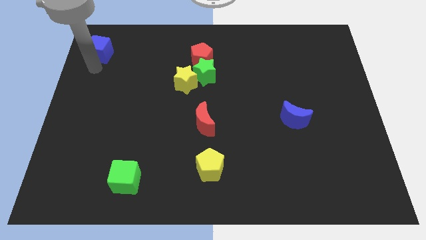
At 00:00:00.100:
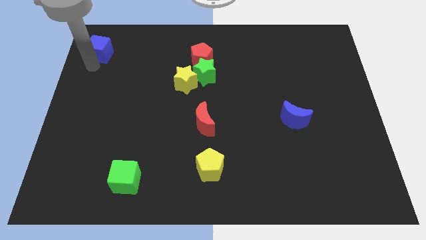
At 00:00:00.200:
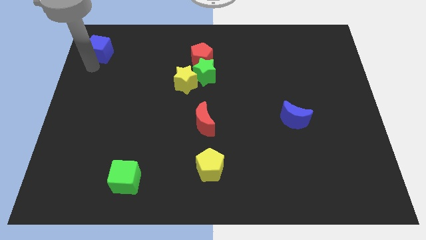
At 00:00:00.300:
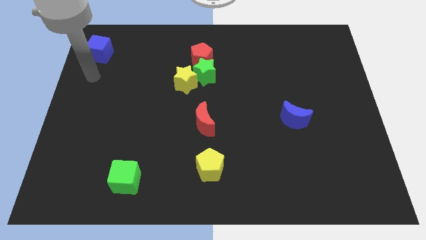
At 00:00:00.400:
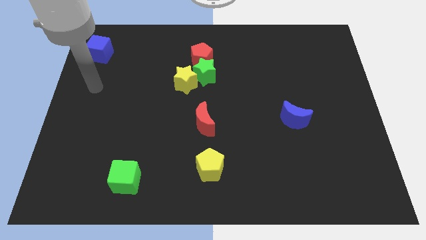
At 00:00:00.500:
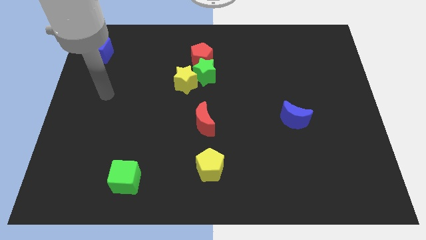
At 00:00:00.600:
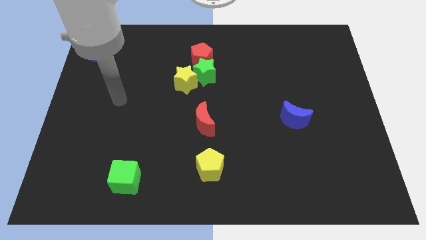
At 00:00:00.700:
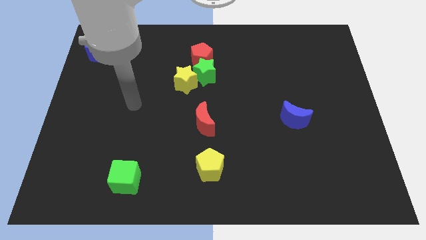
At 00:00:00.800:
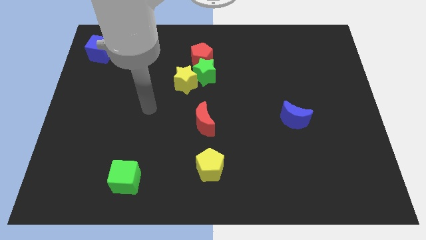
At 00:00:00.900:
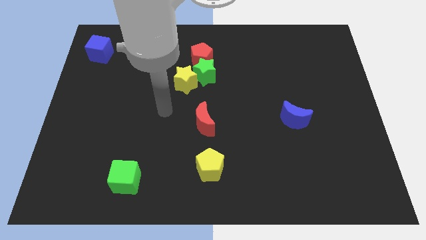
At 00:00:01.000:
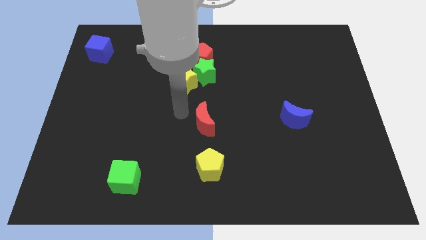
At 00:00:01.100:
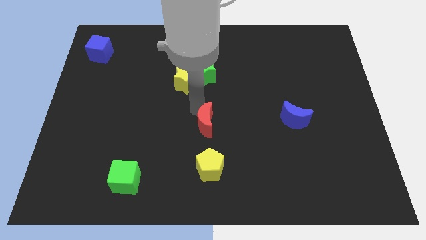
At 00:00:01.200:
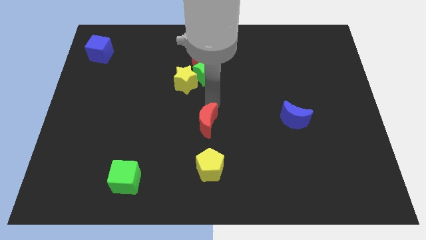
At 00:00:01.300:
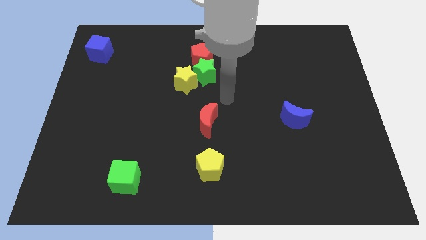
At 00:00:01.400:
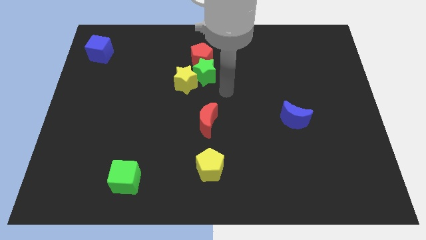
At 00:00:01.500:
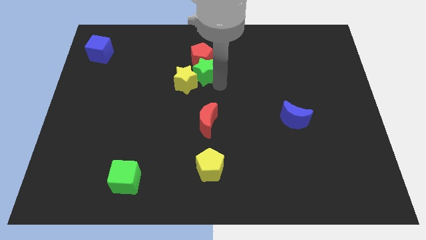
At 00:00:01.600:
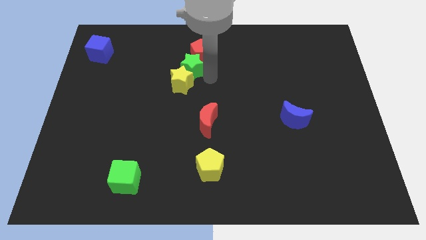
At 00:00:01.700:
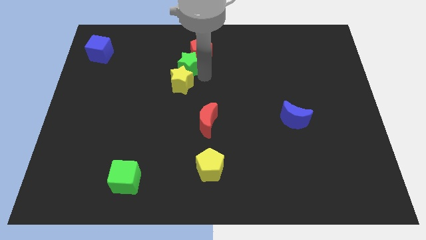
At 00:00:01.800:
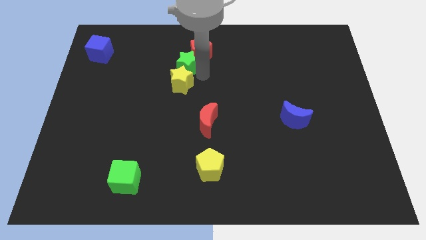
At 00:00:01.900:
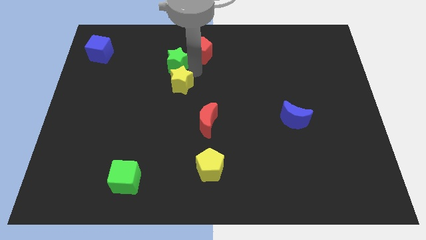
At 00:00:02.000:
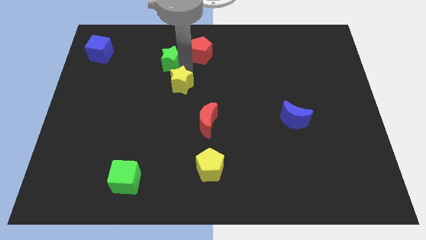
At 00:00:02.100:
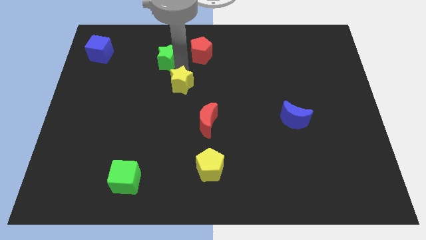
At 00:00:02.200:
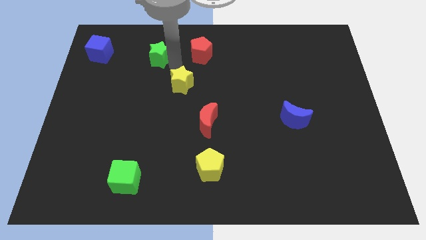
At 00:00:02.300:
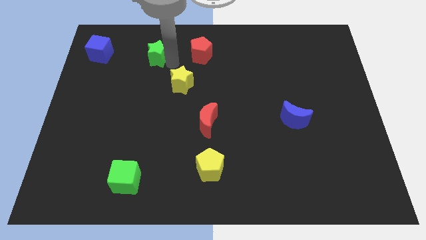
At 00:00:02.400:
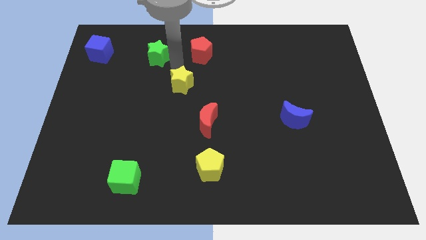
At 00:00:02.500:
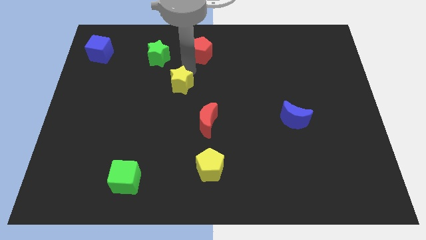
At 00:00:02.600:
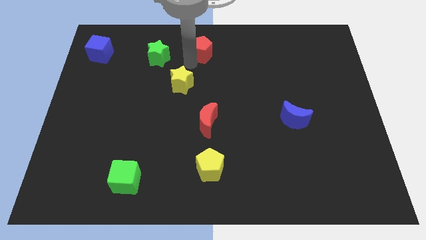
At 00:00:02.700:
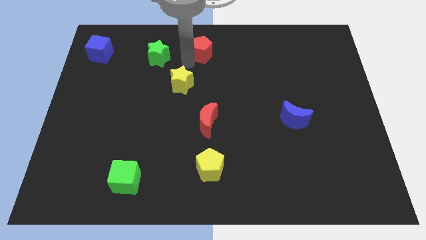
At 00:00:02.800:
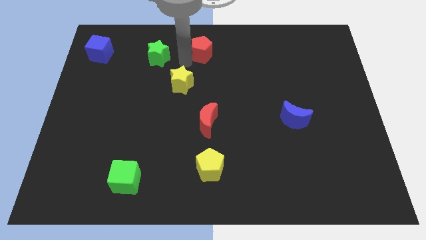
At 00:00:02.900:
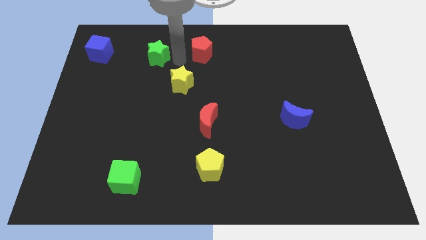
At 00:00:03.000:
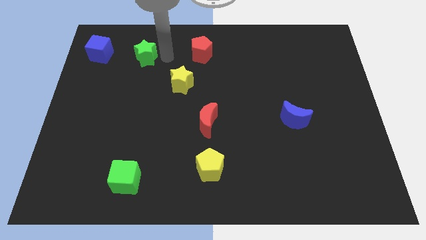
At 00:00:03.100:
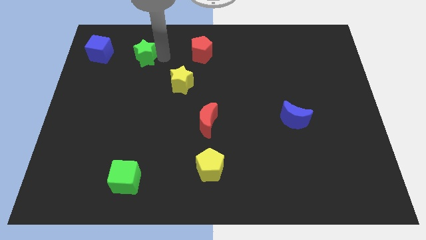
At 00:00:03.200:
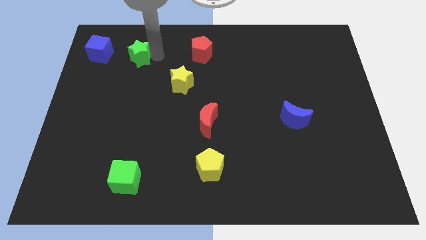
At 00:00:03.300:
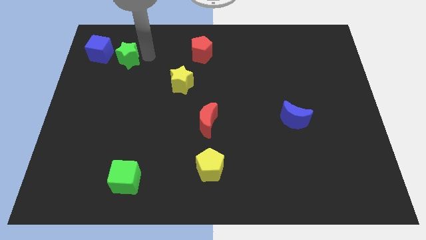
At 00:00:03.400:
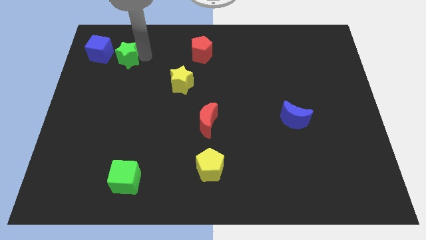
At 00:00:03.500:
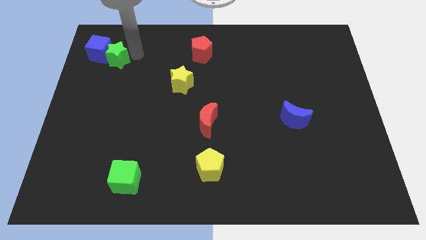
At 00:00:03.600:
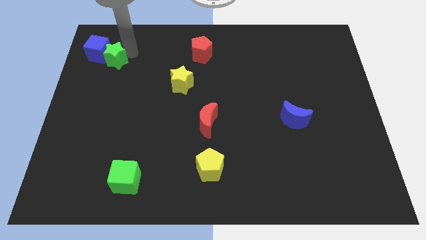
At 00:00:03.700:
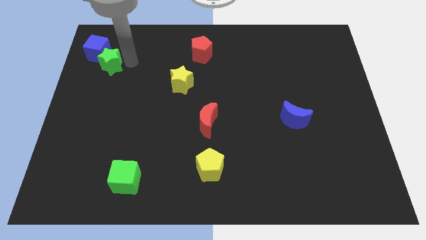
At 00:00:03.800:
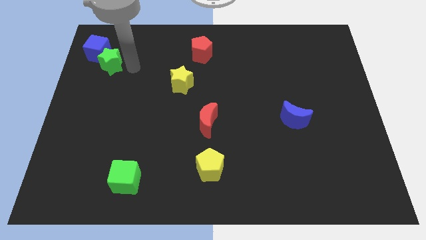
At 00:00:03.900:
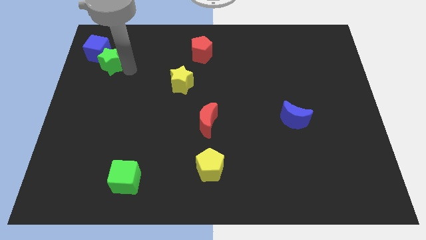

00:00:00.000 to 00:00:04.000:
push the green star into the blue cube

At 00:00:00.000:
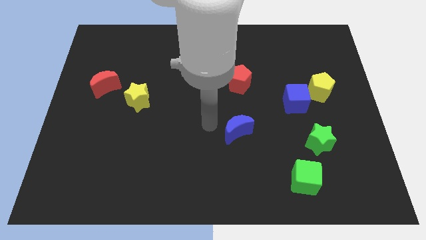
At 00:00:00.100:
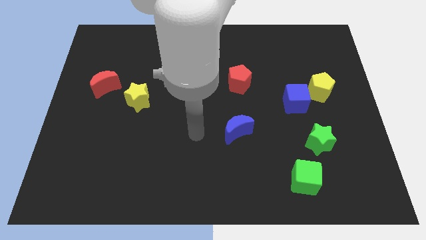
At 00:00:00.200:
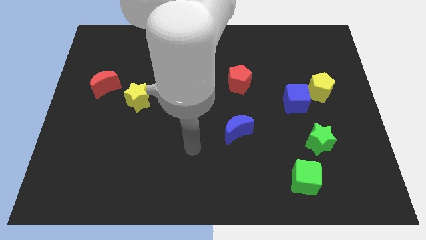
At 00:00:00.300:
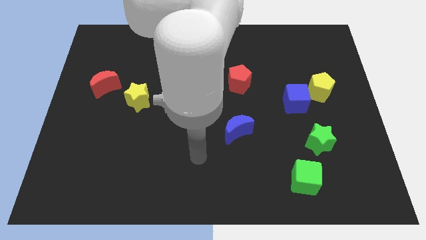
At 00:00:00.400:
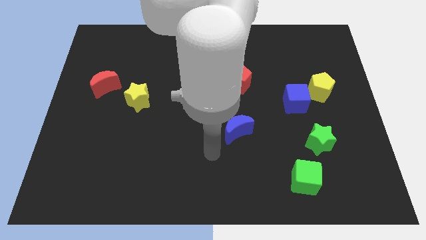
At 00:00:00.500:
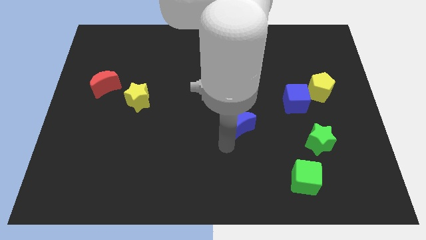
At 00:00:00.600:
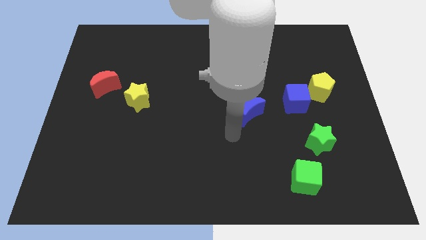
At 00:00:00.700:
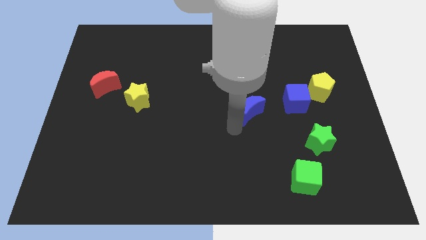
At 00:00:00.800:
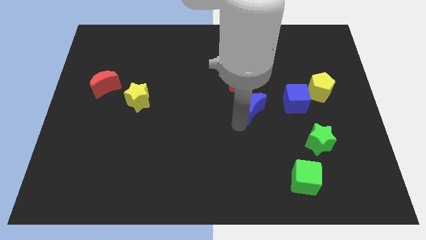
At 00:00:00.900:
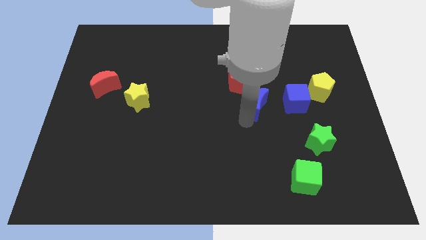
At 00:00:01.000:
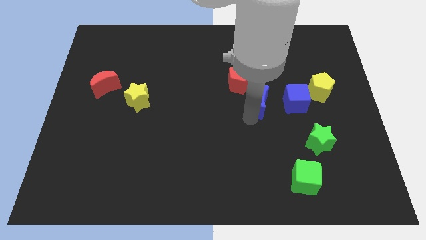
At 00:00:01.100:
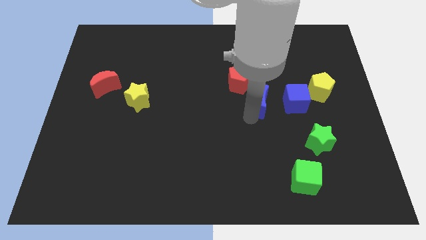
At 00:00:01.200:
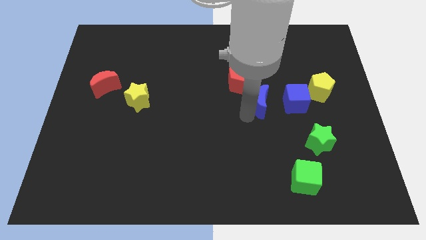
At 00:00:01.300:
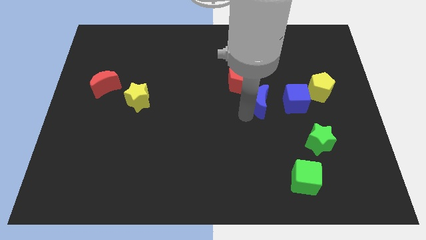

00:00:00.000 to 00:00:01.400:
place the blue moon diagonally bottom right of the red pentagon

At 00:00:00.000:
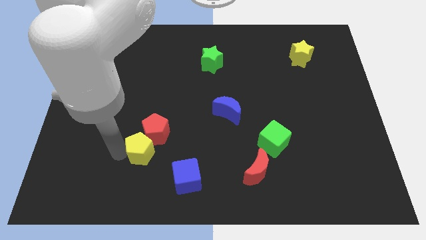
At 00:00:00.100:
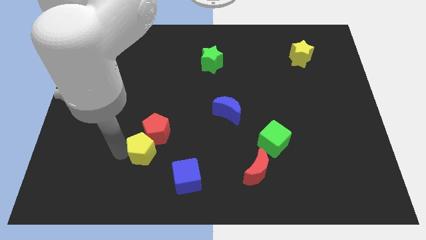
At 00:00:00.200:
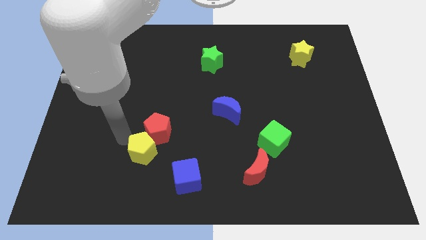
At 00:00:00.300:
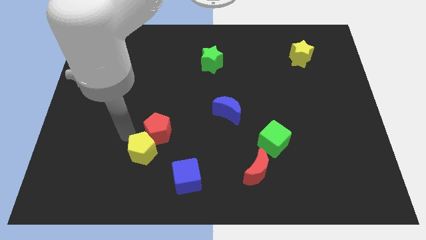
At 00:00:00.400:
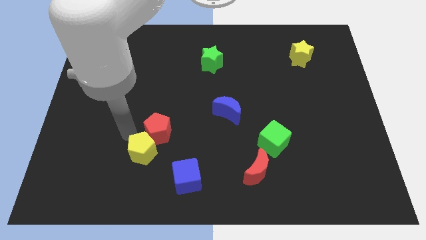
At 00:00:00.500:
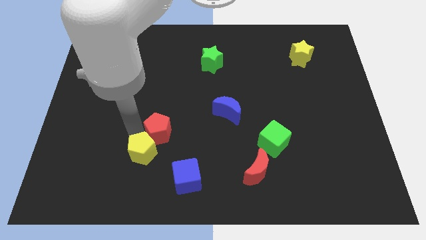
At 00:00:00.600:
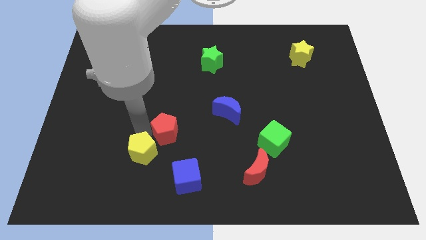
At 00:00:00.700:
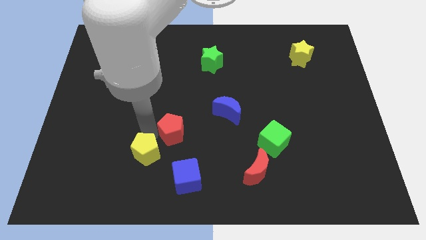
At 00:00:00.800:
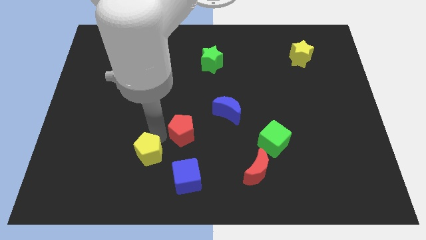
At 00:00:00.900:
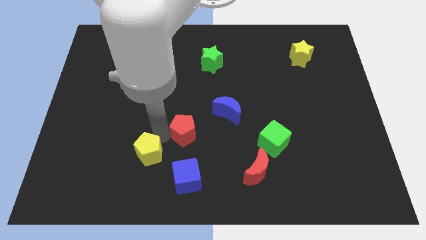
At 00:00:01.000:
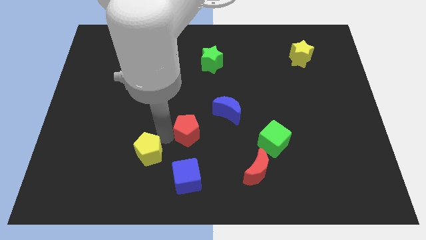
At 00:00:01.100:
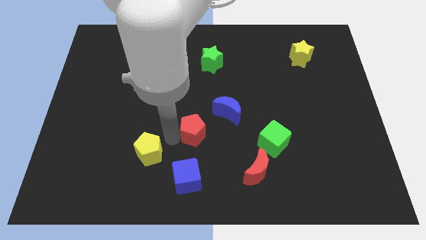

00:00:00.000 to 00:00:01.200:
put the red pentagon above the blue cube

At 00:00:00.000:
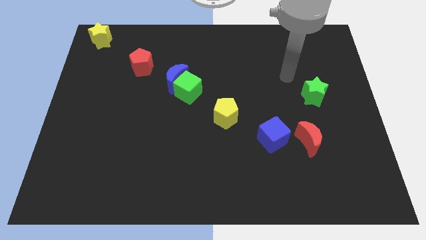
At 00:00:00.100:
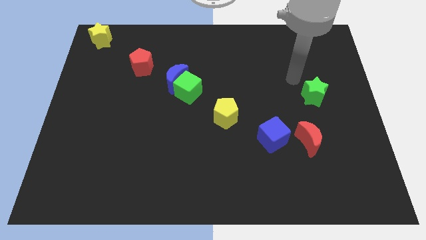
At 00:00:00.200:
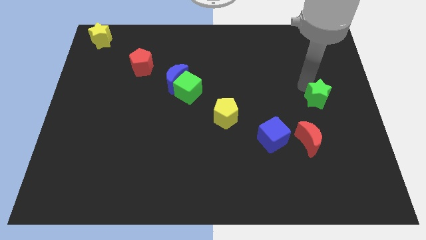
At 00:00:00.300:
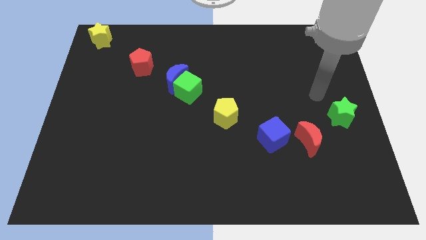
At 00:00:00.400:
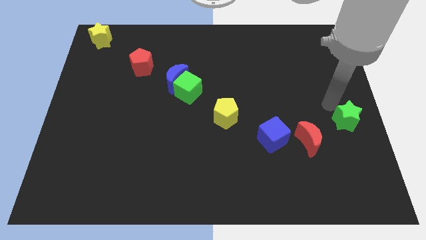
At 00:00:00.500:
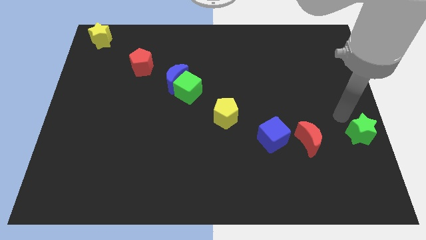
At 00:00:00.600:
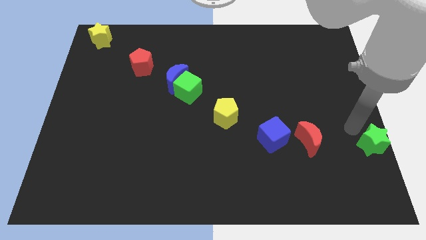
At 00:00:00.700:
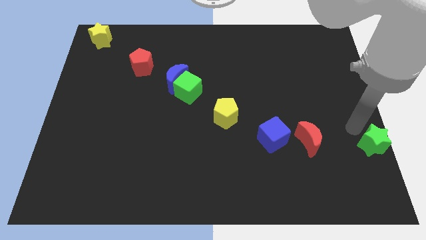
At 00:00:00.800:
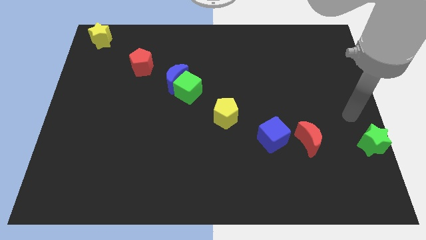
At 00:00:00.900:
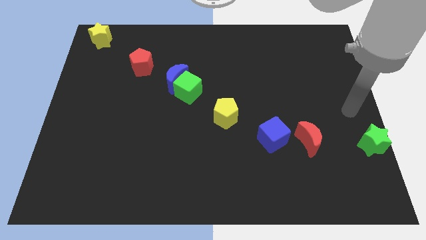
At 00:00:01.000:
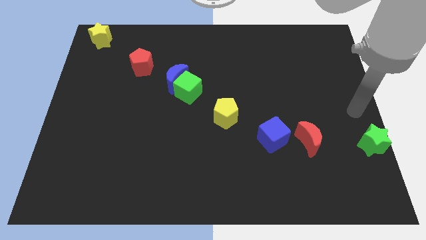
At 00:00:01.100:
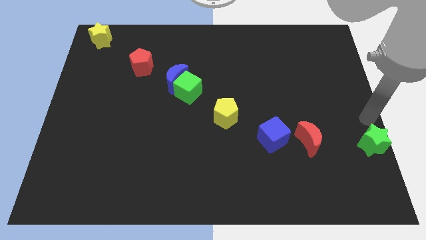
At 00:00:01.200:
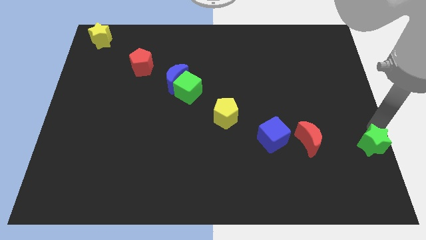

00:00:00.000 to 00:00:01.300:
put the green star to the right of the red moon

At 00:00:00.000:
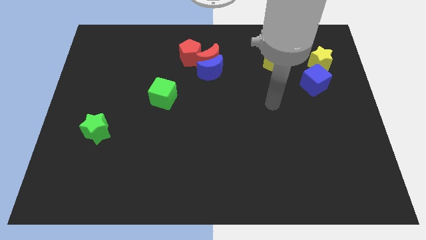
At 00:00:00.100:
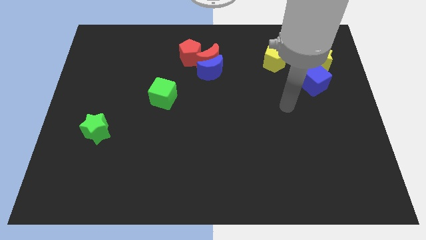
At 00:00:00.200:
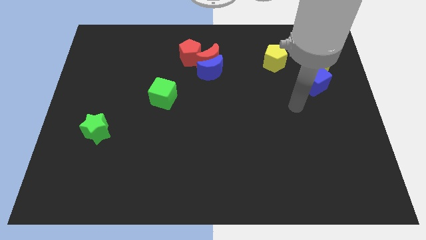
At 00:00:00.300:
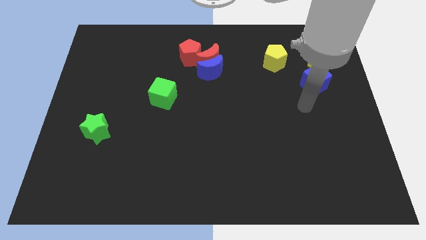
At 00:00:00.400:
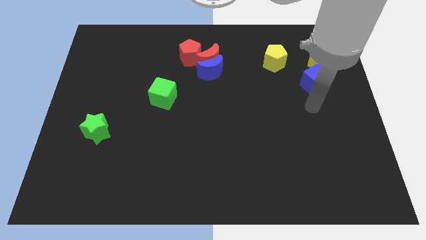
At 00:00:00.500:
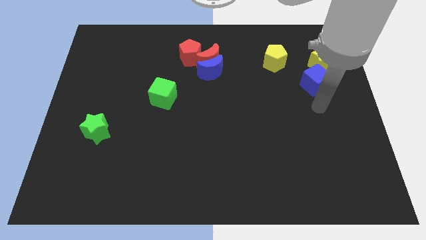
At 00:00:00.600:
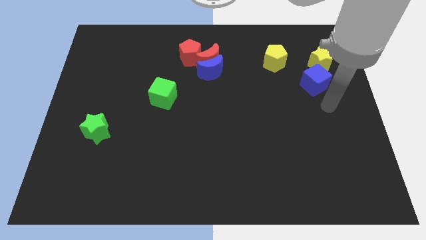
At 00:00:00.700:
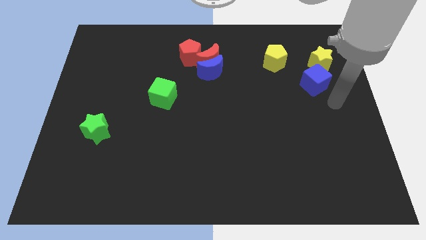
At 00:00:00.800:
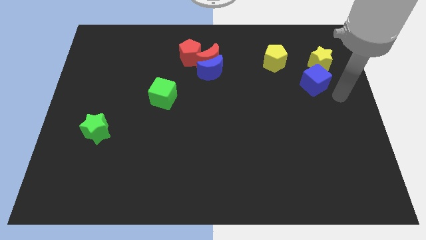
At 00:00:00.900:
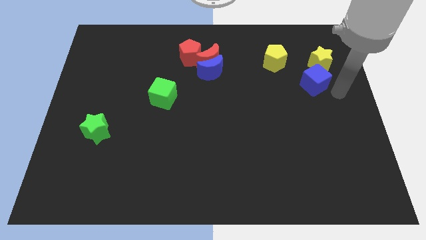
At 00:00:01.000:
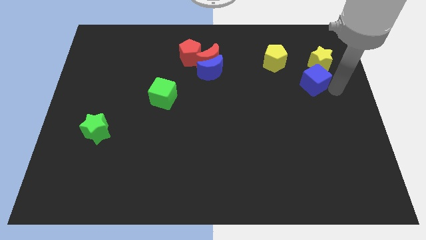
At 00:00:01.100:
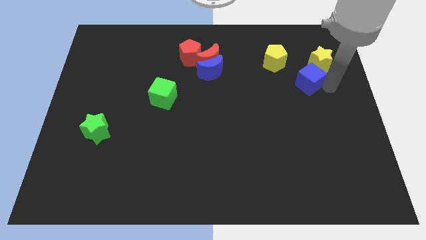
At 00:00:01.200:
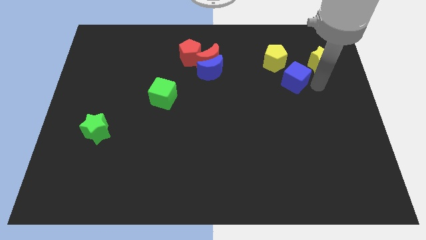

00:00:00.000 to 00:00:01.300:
separate the blue cube from the yellow star
